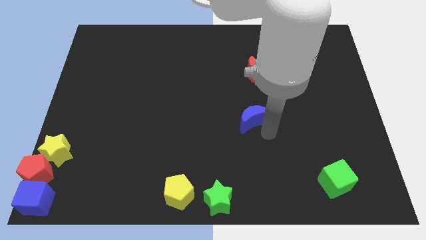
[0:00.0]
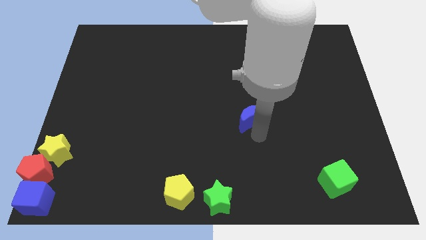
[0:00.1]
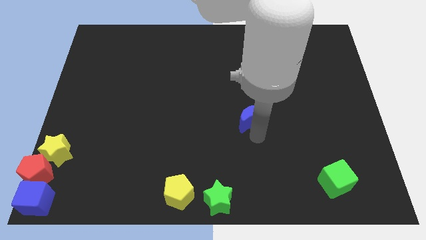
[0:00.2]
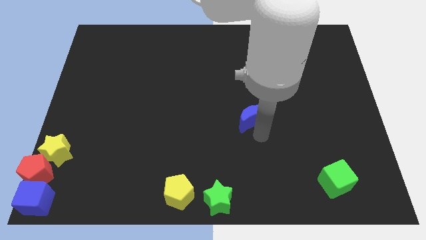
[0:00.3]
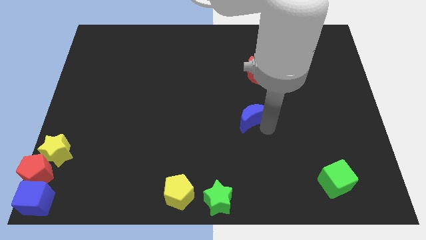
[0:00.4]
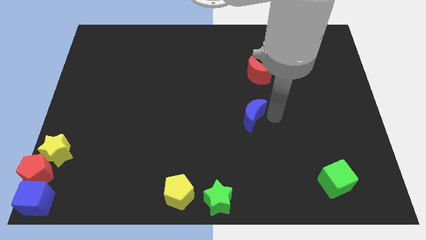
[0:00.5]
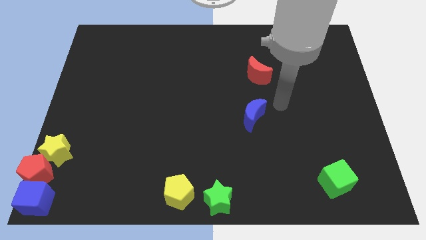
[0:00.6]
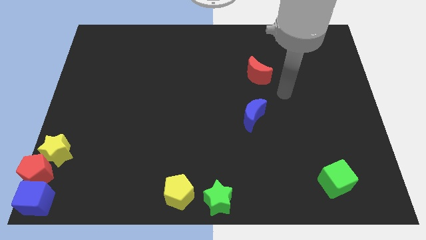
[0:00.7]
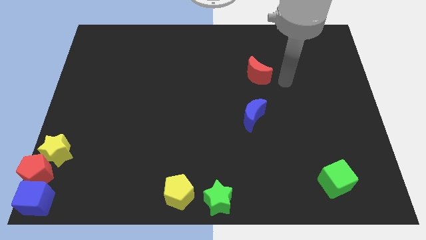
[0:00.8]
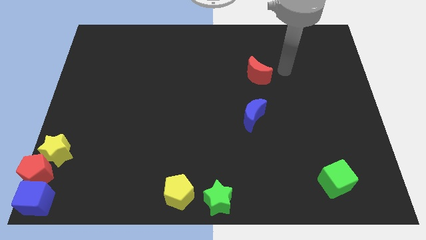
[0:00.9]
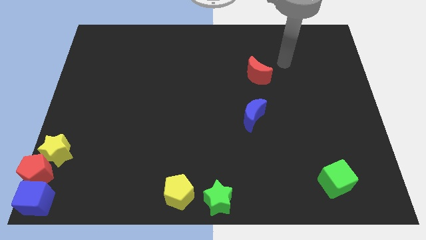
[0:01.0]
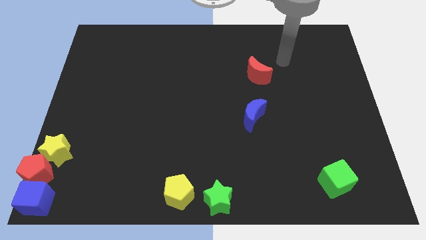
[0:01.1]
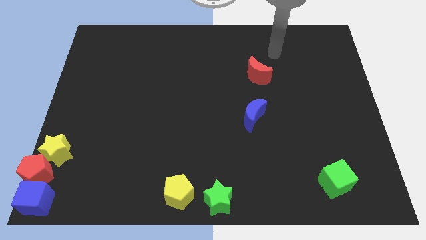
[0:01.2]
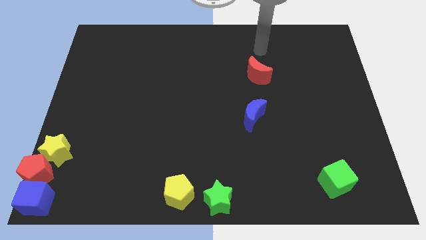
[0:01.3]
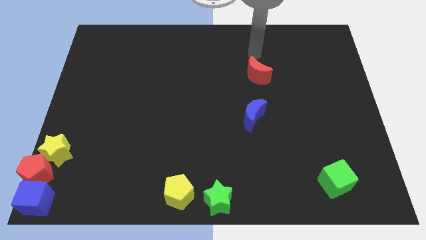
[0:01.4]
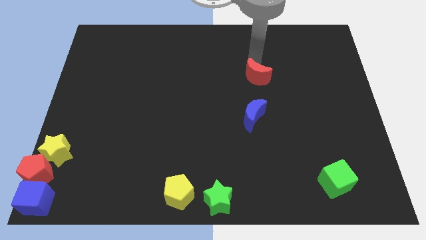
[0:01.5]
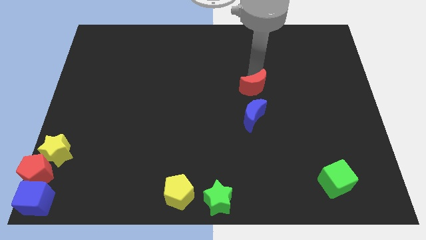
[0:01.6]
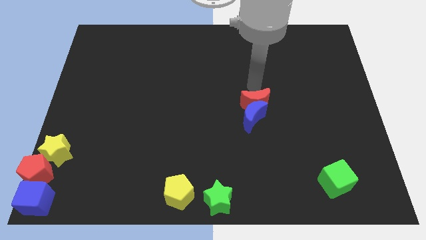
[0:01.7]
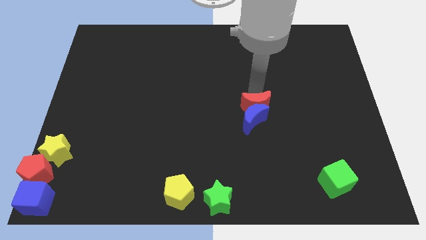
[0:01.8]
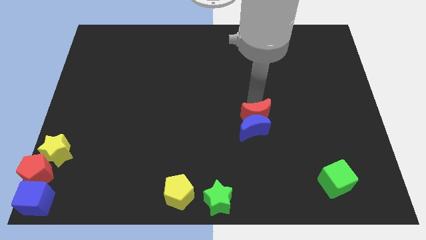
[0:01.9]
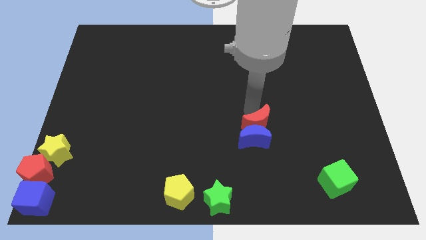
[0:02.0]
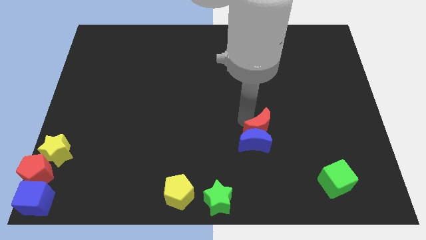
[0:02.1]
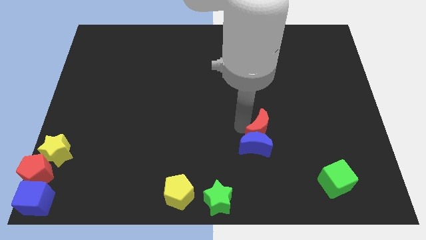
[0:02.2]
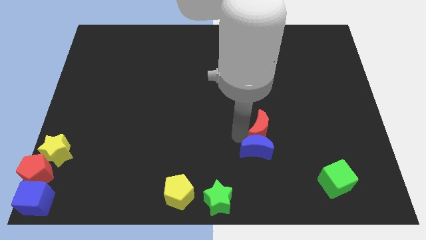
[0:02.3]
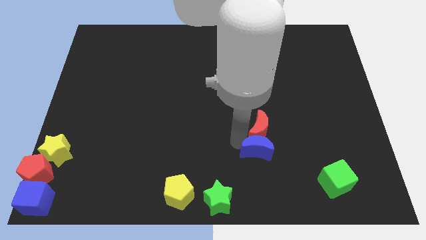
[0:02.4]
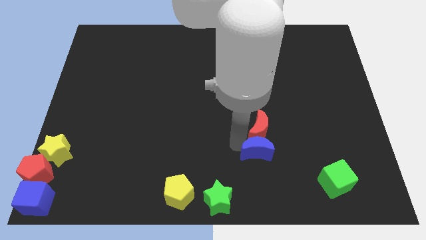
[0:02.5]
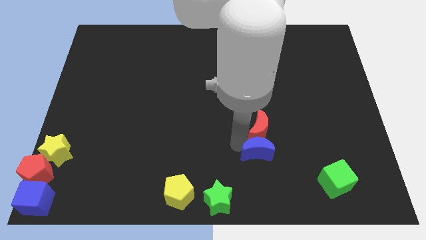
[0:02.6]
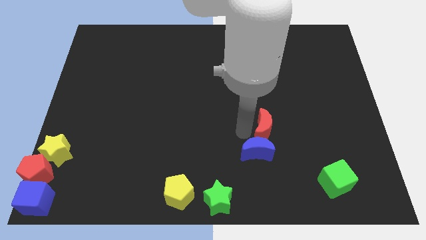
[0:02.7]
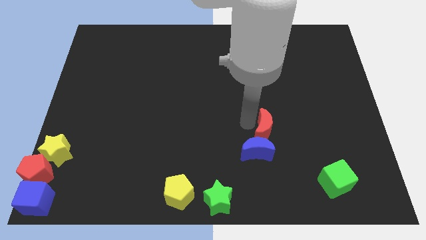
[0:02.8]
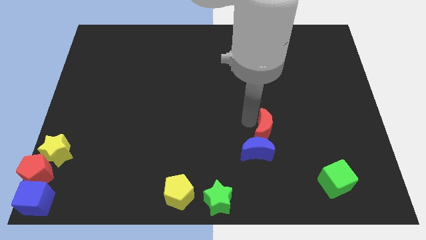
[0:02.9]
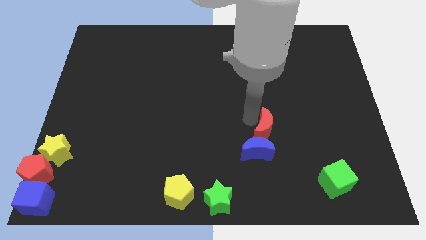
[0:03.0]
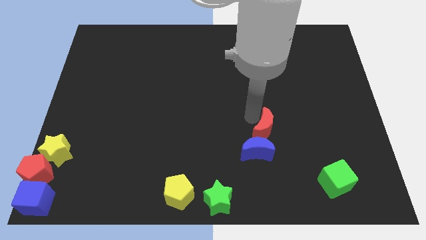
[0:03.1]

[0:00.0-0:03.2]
push the red moon into the blue moon

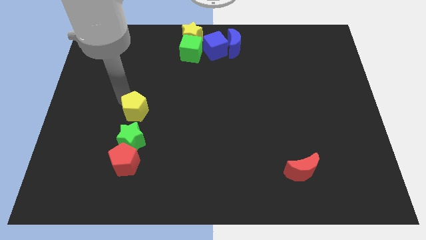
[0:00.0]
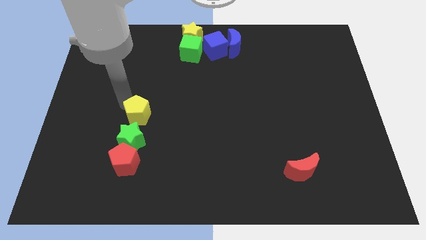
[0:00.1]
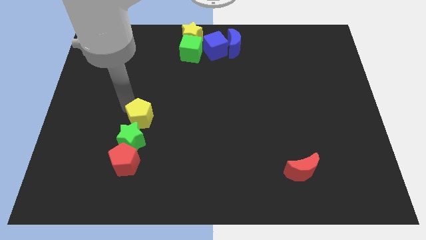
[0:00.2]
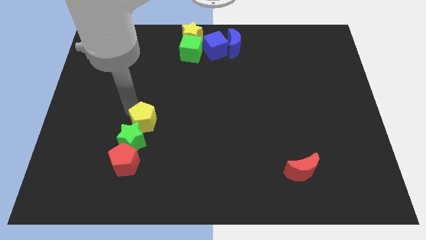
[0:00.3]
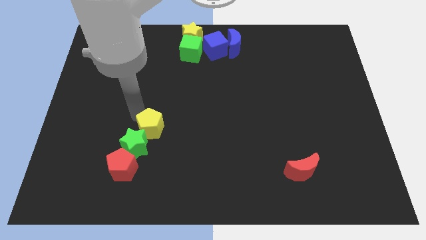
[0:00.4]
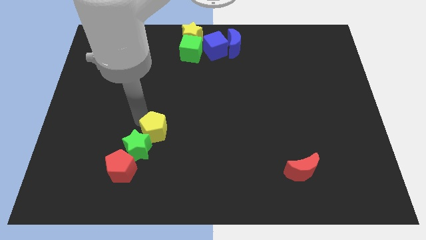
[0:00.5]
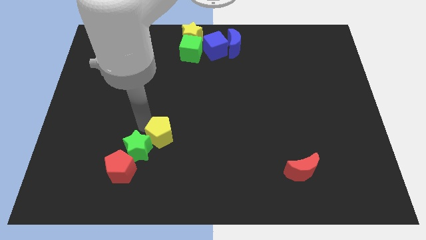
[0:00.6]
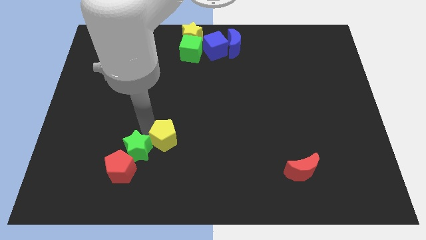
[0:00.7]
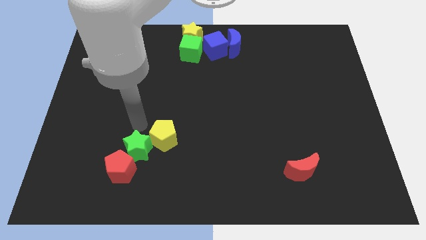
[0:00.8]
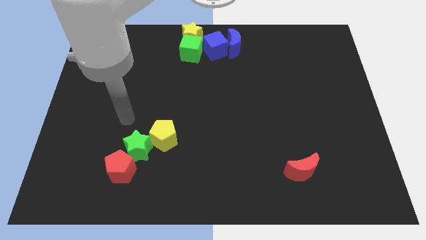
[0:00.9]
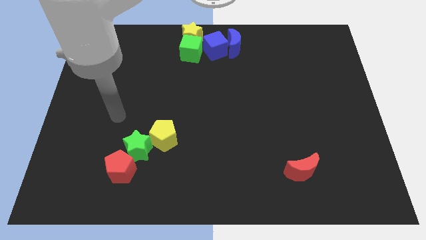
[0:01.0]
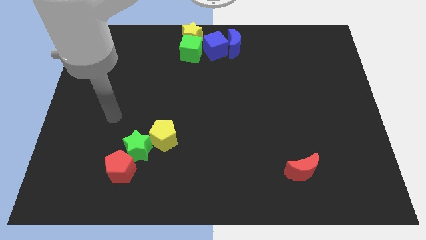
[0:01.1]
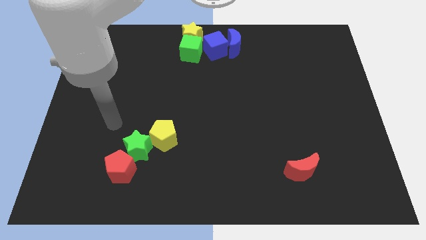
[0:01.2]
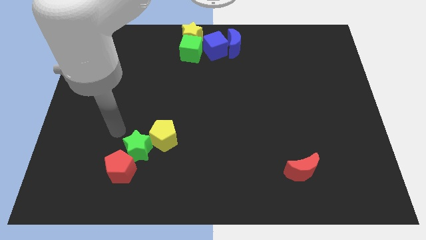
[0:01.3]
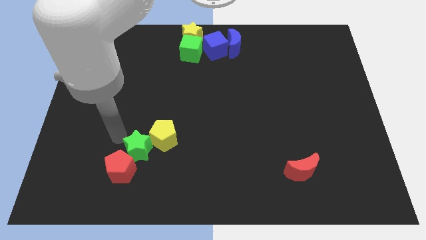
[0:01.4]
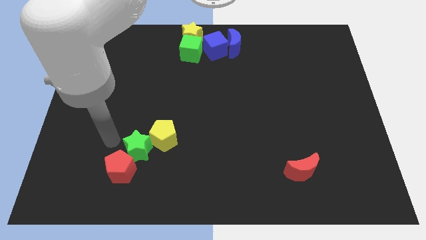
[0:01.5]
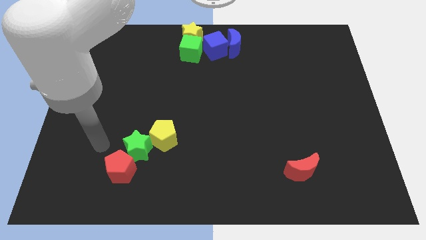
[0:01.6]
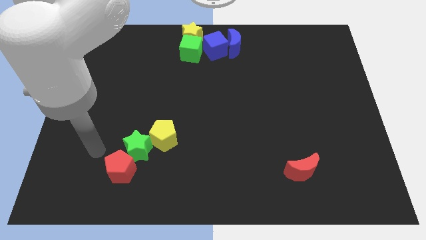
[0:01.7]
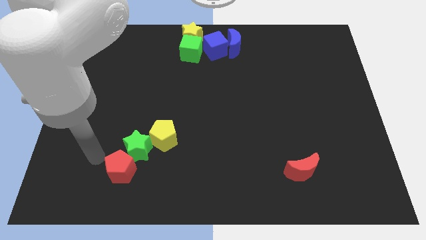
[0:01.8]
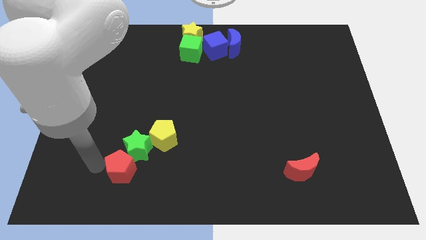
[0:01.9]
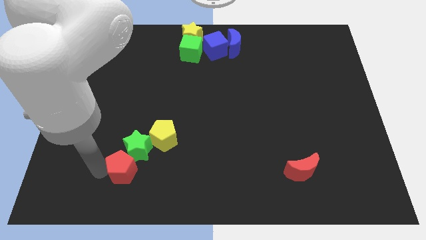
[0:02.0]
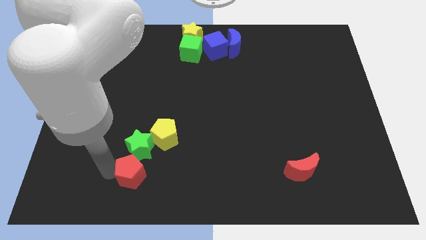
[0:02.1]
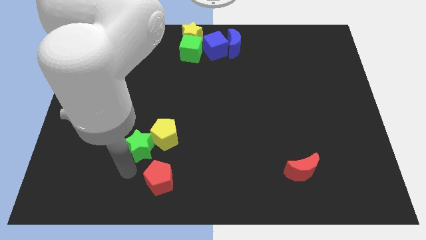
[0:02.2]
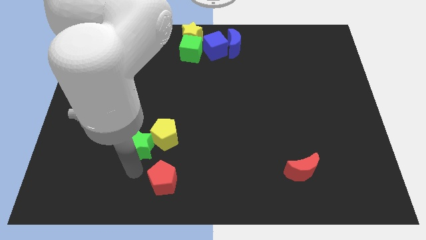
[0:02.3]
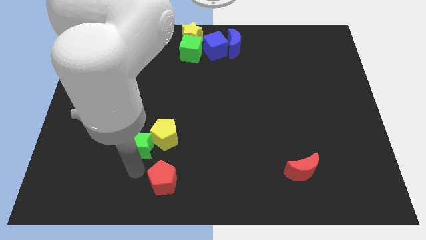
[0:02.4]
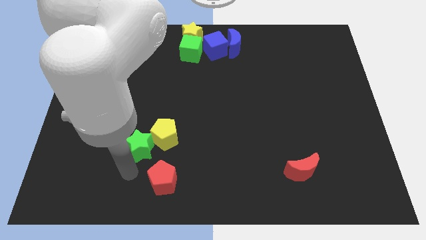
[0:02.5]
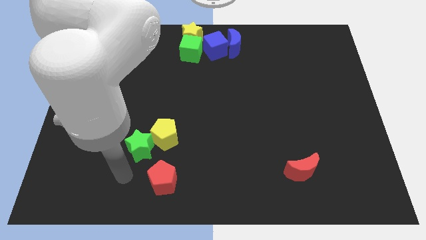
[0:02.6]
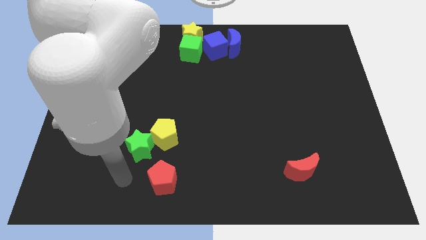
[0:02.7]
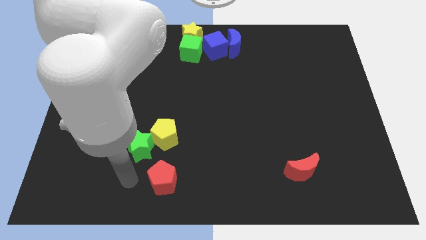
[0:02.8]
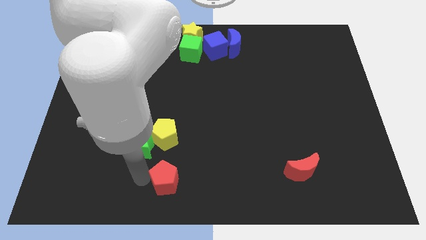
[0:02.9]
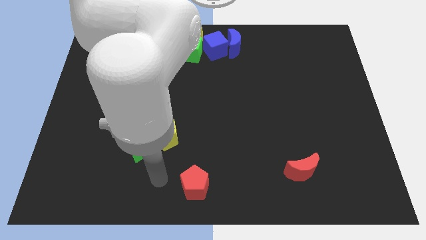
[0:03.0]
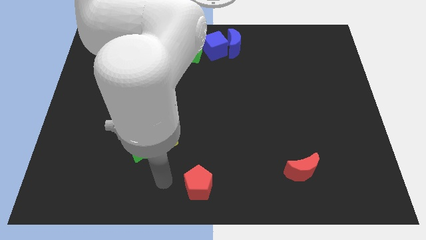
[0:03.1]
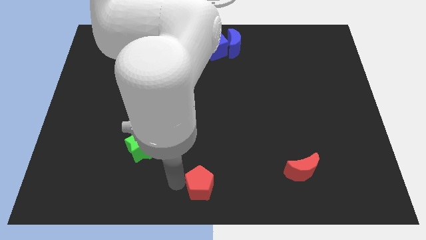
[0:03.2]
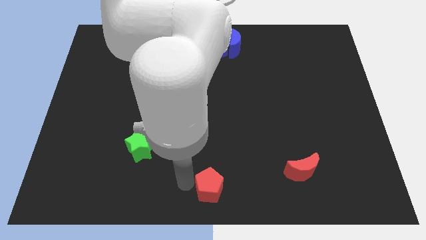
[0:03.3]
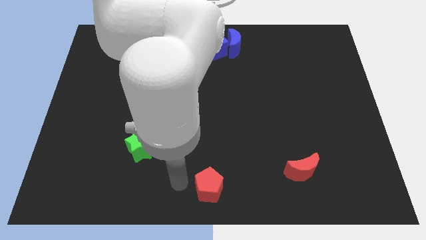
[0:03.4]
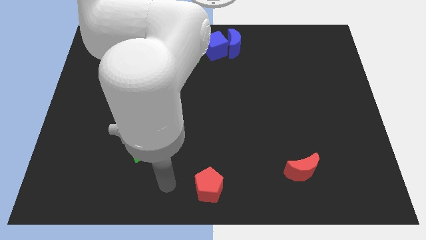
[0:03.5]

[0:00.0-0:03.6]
push yellow pentagon to the center red pentagon to the bottom center

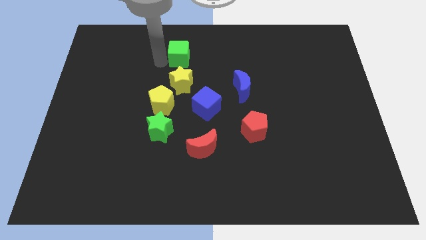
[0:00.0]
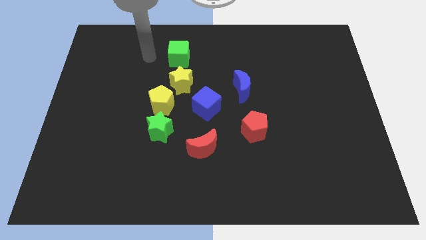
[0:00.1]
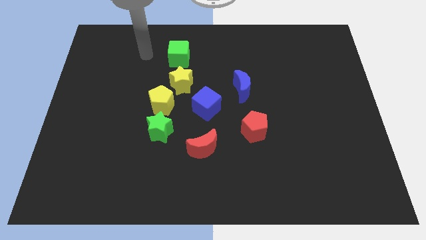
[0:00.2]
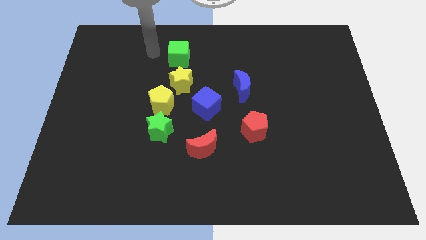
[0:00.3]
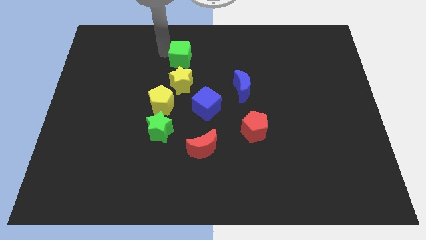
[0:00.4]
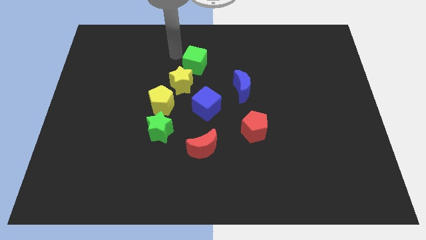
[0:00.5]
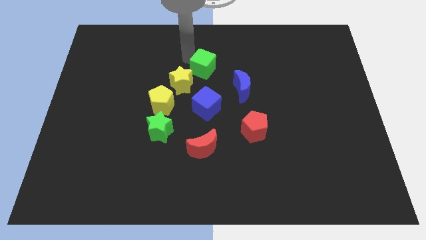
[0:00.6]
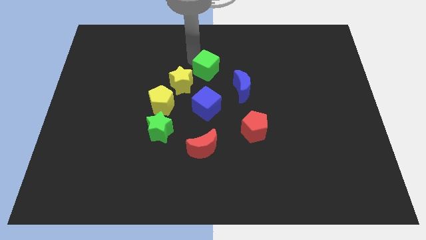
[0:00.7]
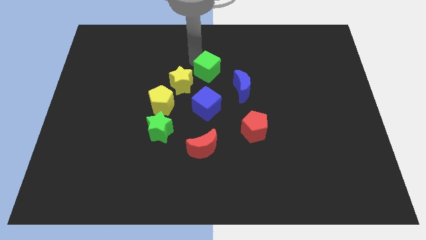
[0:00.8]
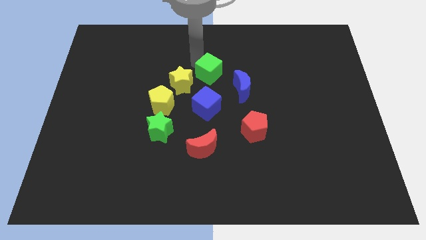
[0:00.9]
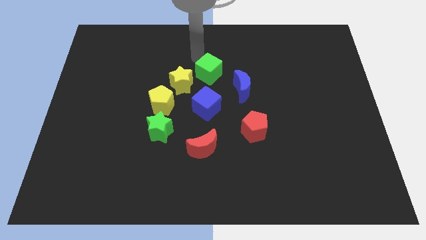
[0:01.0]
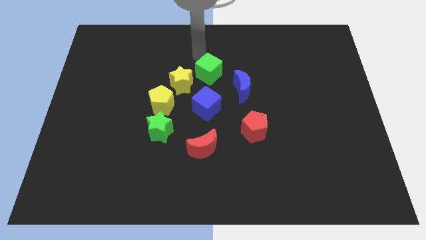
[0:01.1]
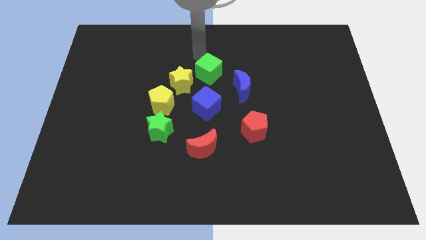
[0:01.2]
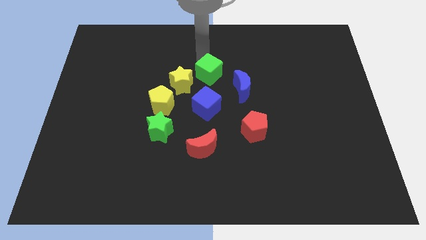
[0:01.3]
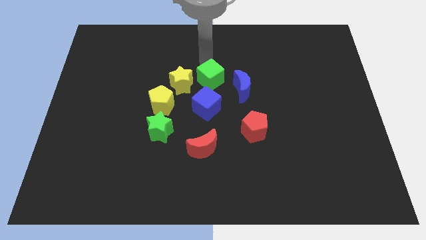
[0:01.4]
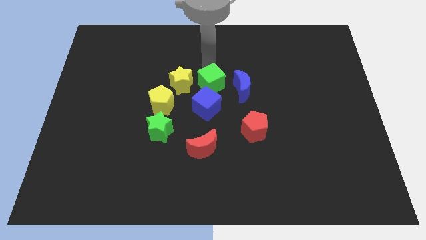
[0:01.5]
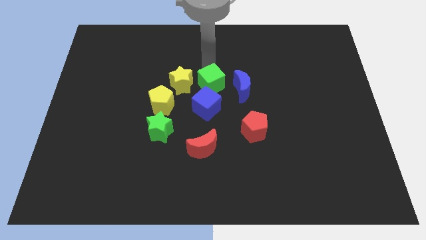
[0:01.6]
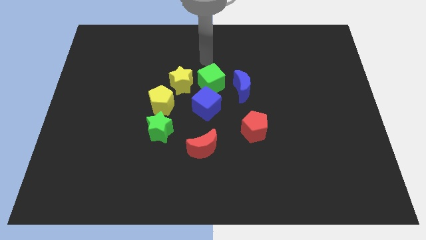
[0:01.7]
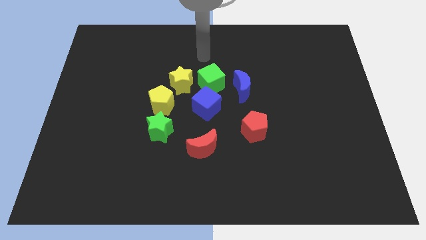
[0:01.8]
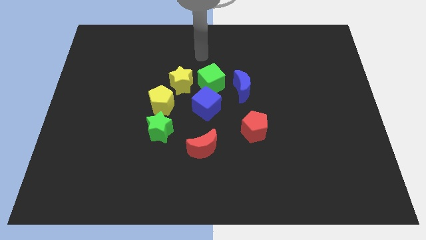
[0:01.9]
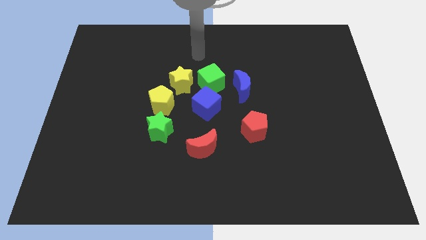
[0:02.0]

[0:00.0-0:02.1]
move the green cube near to the blue cube
